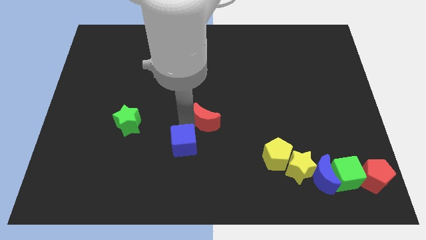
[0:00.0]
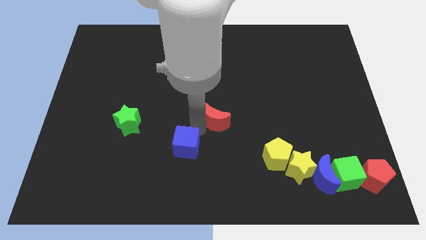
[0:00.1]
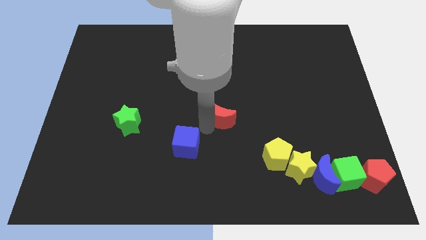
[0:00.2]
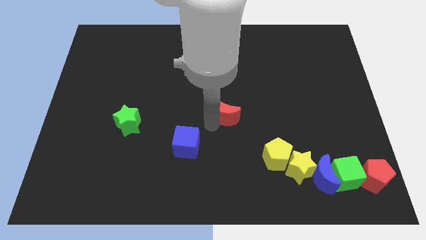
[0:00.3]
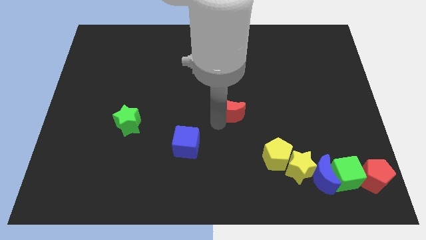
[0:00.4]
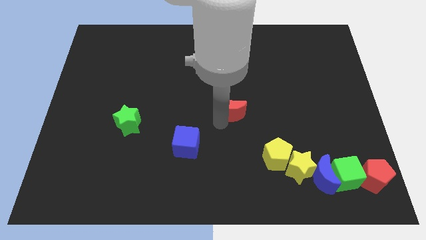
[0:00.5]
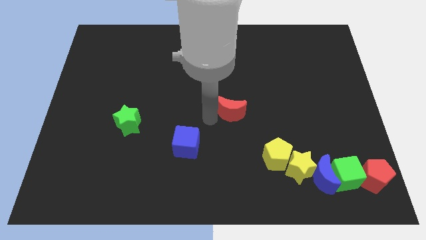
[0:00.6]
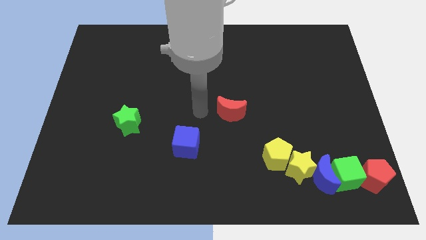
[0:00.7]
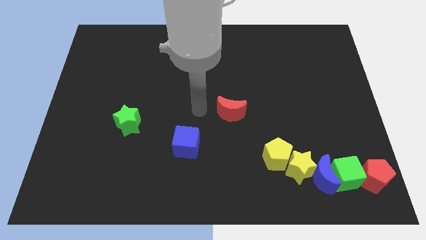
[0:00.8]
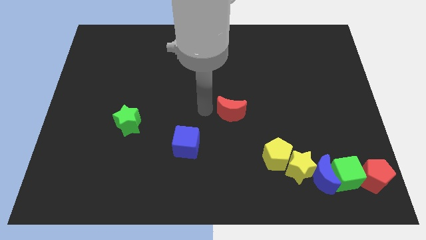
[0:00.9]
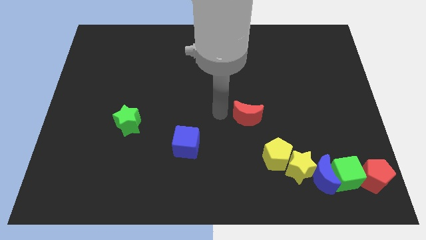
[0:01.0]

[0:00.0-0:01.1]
move the red moon to the center

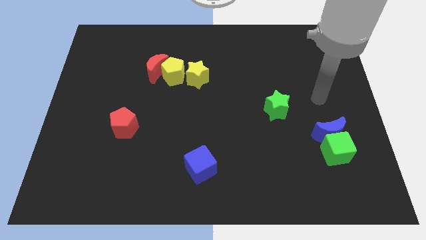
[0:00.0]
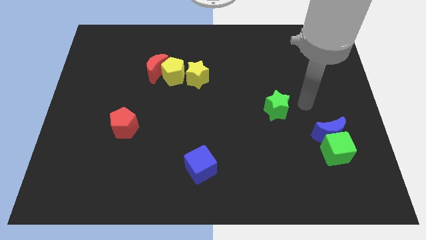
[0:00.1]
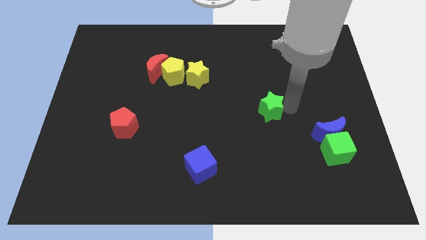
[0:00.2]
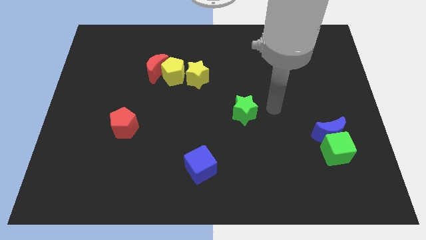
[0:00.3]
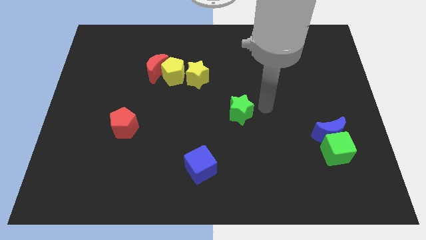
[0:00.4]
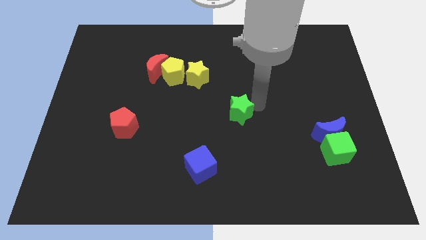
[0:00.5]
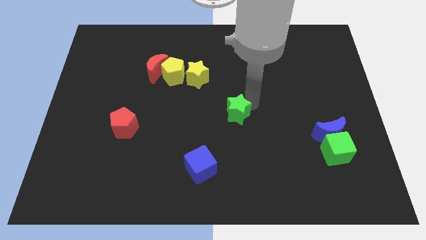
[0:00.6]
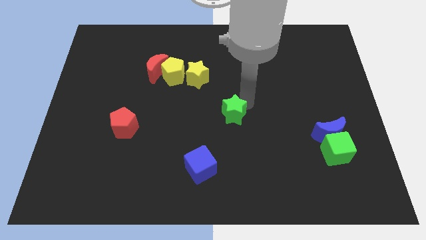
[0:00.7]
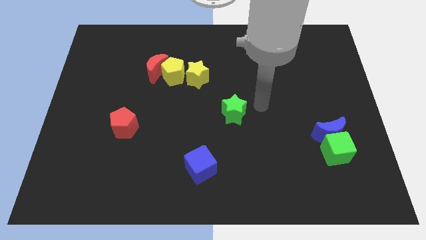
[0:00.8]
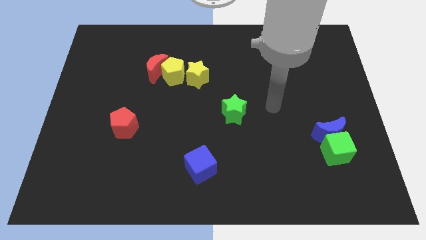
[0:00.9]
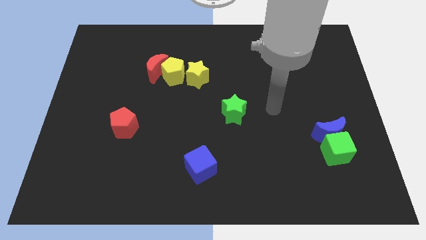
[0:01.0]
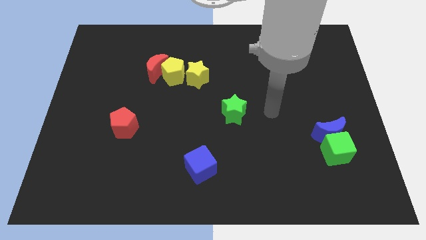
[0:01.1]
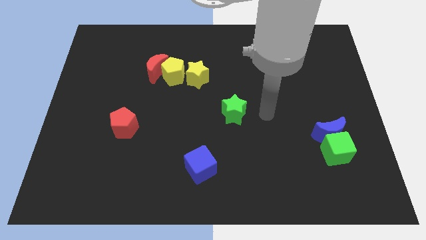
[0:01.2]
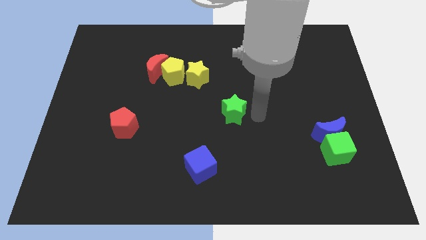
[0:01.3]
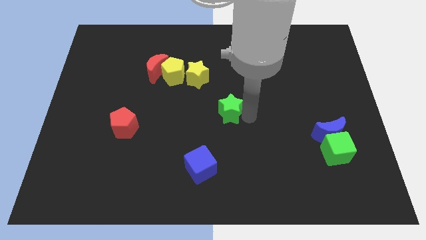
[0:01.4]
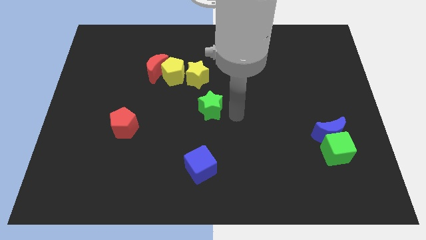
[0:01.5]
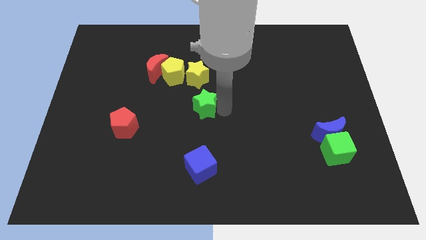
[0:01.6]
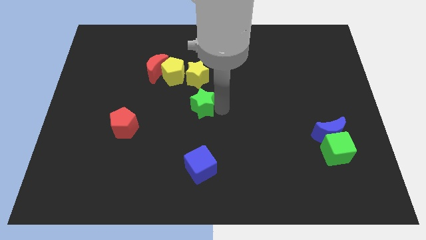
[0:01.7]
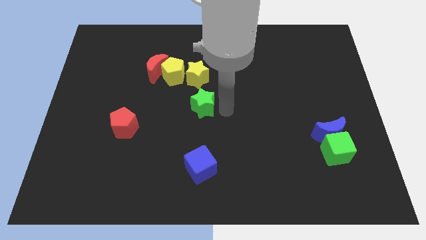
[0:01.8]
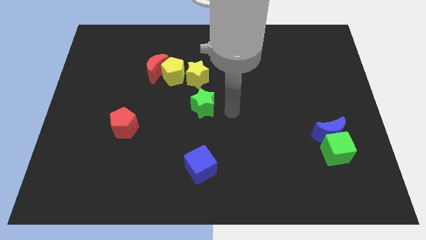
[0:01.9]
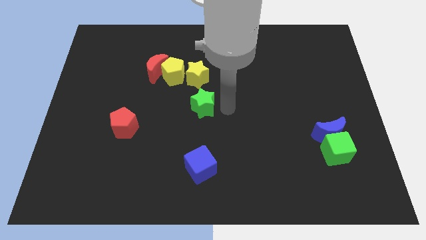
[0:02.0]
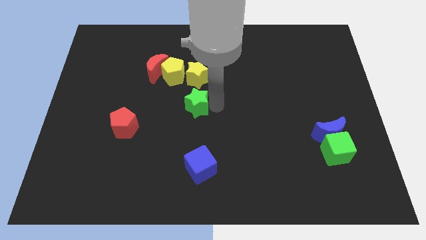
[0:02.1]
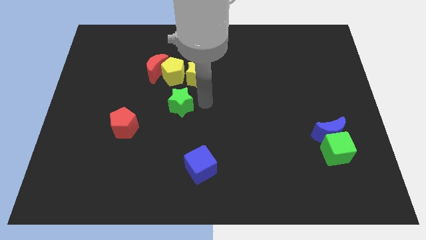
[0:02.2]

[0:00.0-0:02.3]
push the green star bottom of yellow star

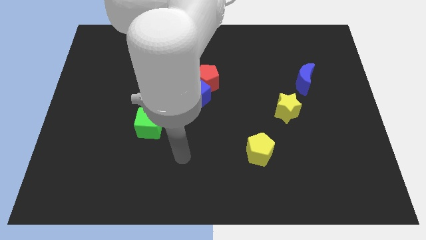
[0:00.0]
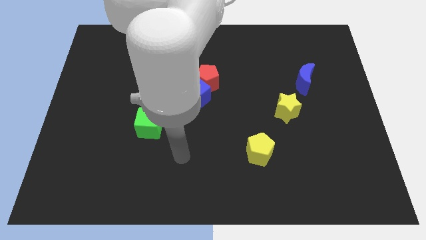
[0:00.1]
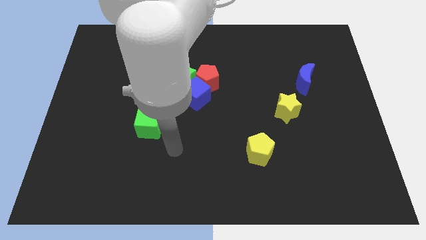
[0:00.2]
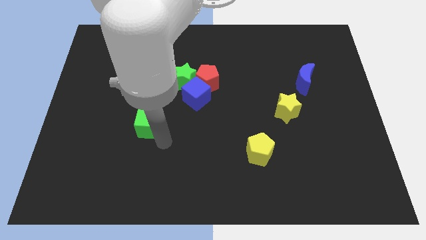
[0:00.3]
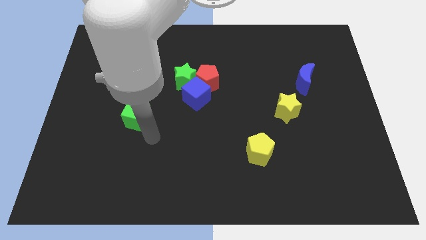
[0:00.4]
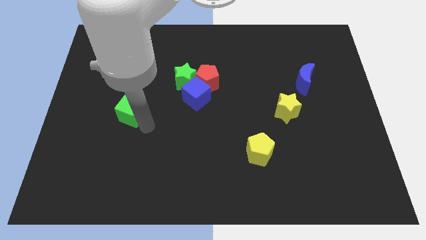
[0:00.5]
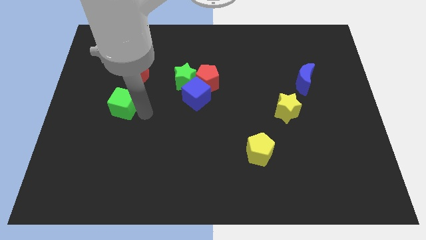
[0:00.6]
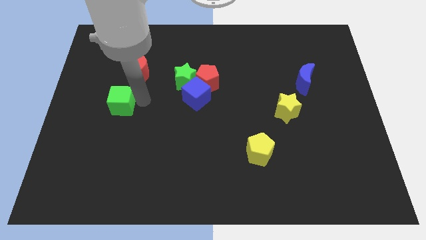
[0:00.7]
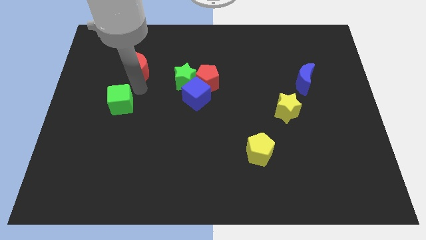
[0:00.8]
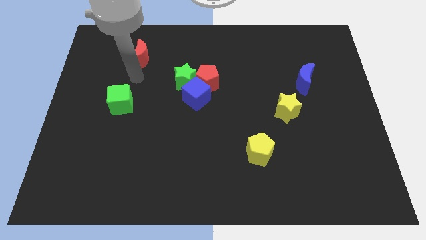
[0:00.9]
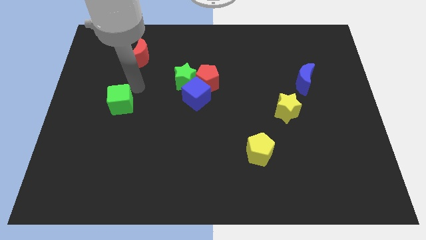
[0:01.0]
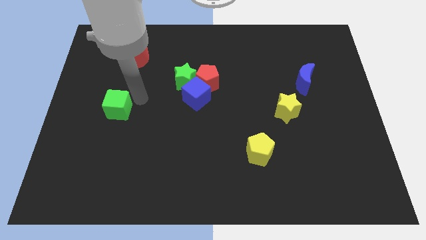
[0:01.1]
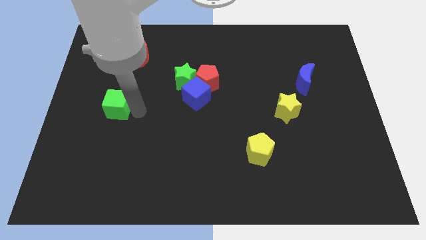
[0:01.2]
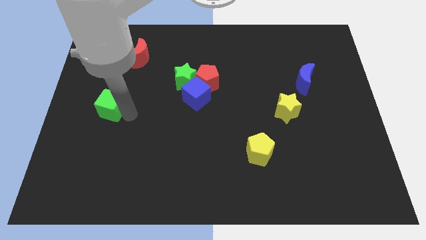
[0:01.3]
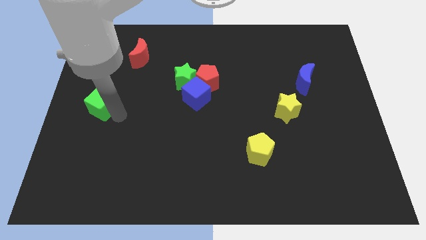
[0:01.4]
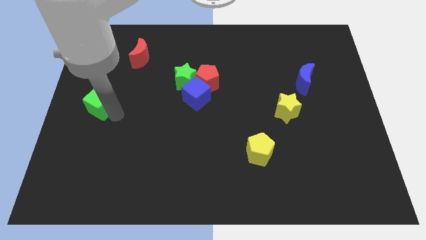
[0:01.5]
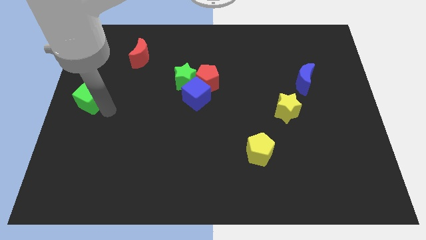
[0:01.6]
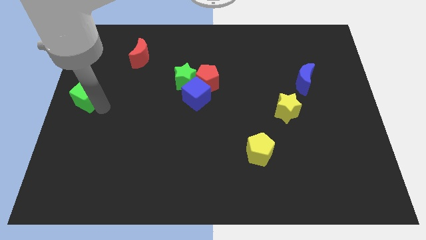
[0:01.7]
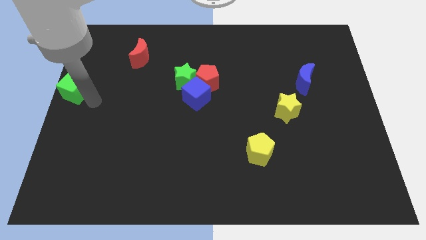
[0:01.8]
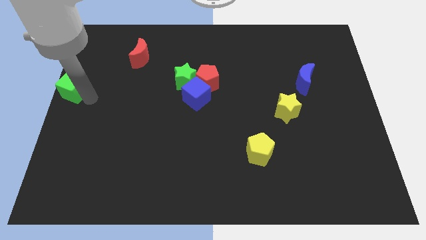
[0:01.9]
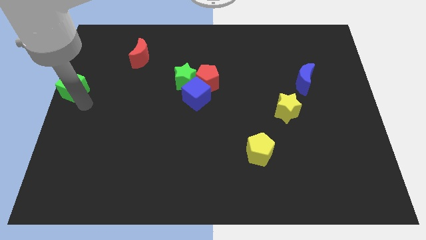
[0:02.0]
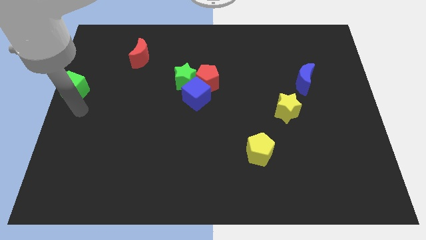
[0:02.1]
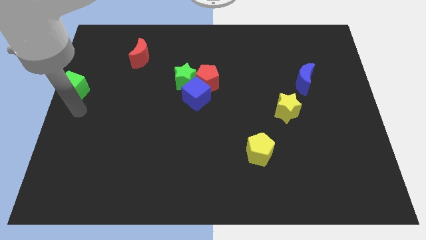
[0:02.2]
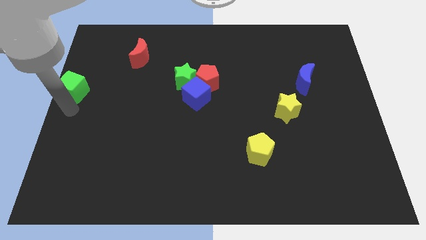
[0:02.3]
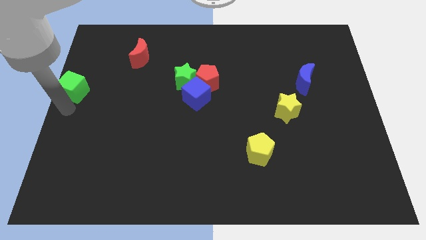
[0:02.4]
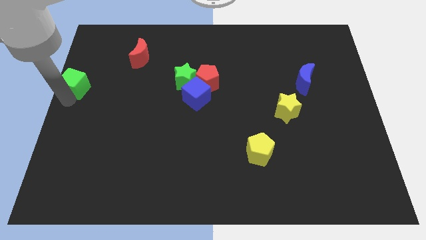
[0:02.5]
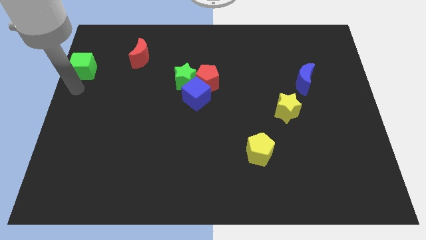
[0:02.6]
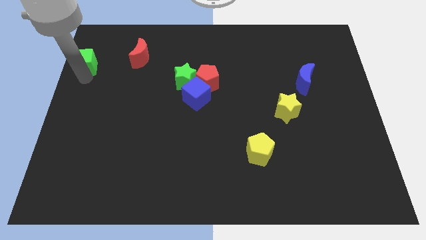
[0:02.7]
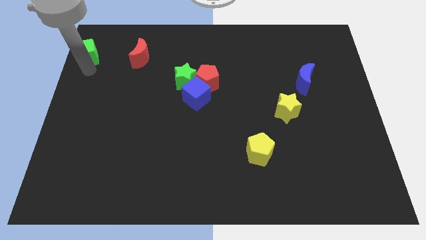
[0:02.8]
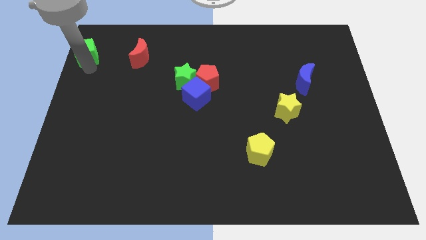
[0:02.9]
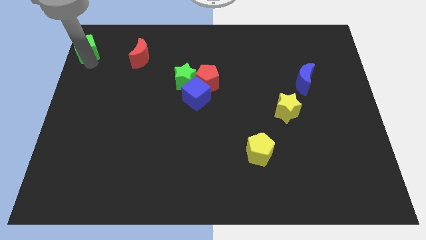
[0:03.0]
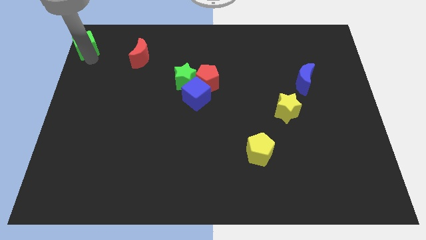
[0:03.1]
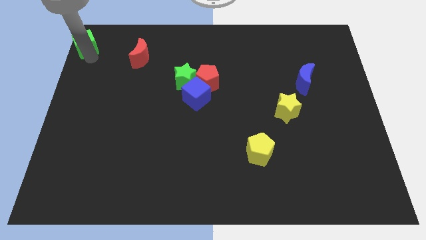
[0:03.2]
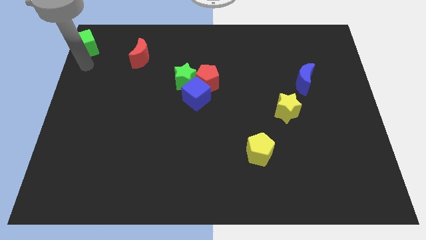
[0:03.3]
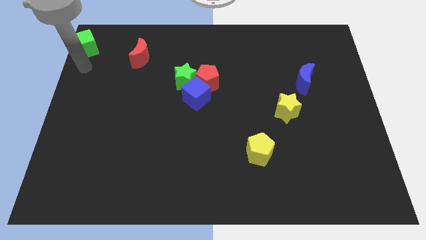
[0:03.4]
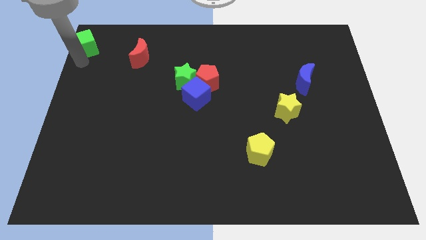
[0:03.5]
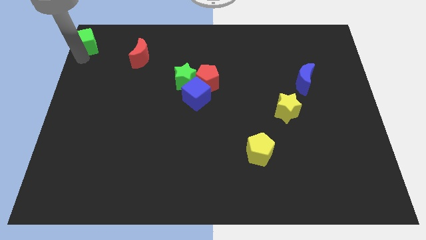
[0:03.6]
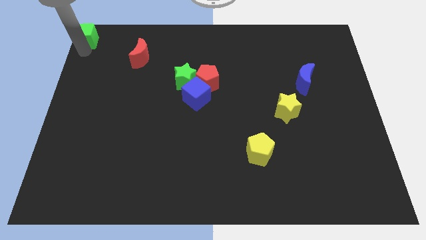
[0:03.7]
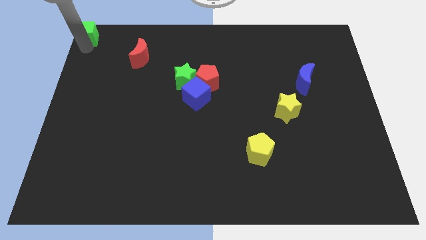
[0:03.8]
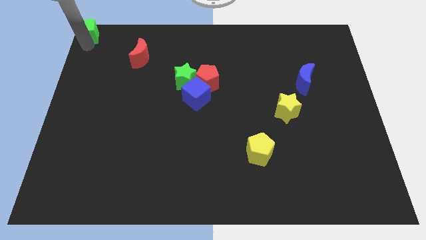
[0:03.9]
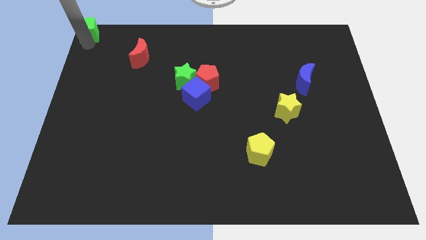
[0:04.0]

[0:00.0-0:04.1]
place the green cube at the top left corner of the board

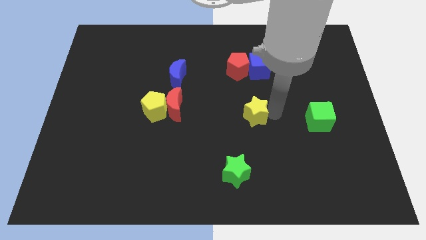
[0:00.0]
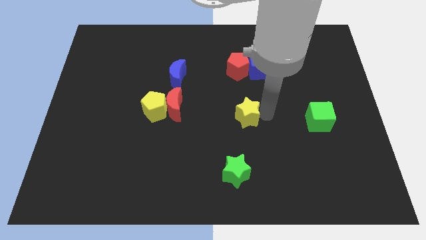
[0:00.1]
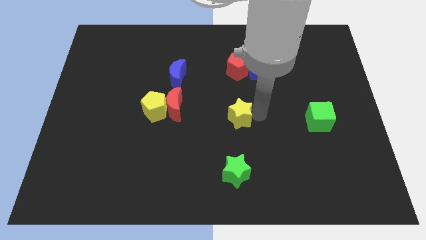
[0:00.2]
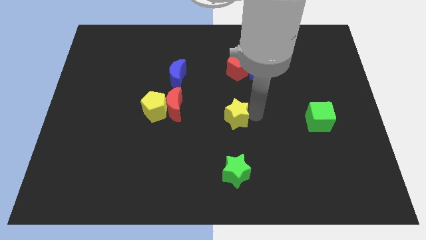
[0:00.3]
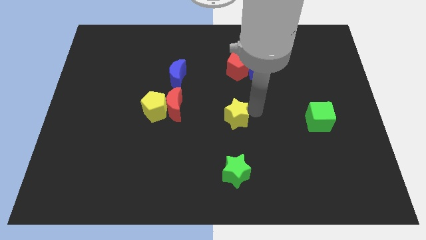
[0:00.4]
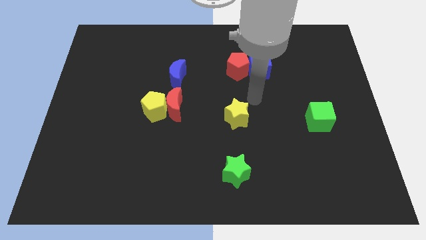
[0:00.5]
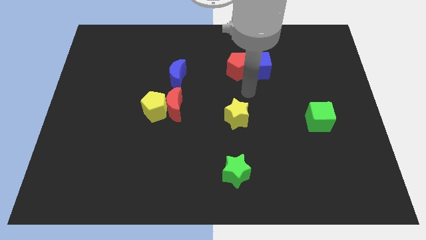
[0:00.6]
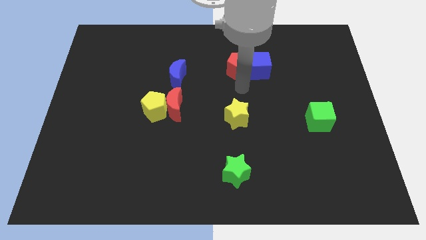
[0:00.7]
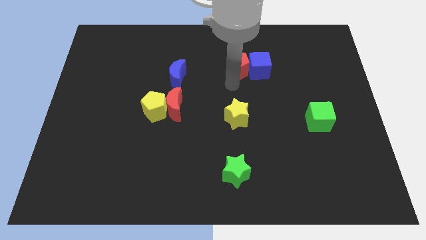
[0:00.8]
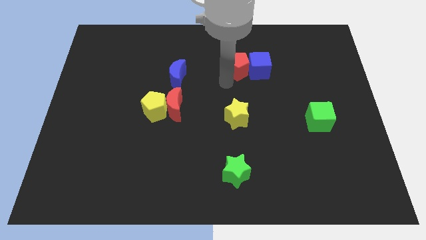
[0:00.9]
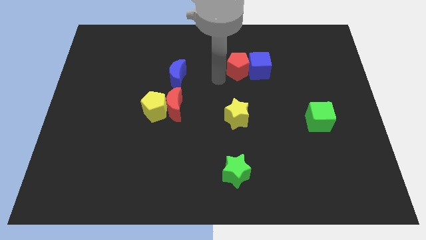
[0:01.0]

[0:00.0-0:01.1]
move yellow star towards red moon

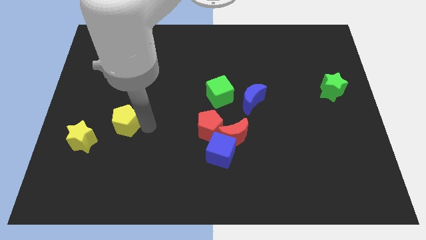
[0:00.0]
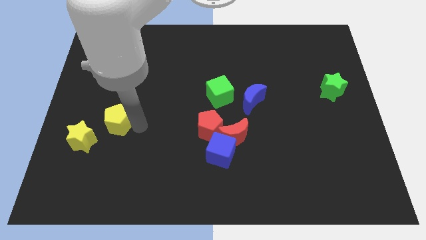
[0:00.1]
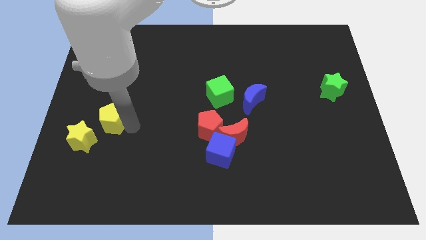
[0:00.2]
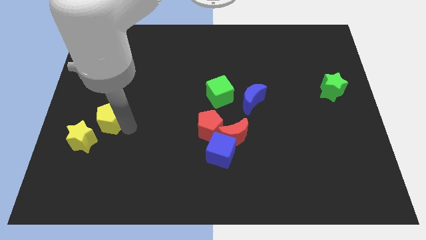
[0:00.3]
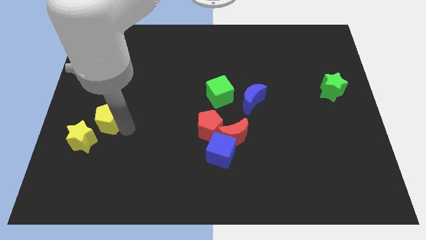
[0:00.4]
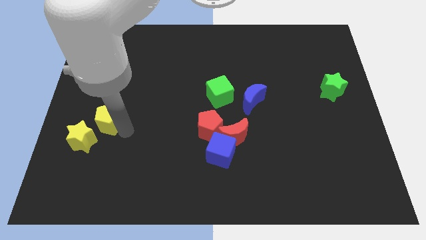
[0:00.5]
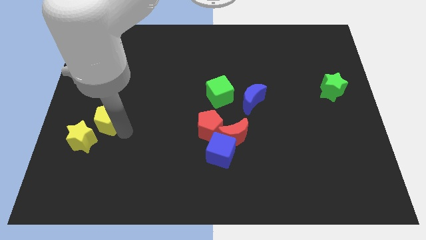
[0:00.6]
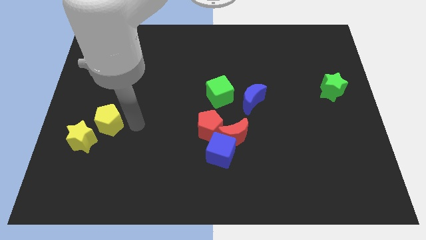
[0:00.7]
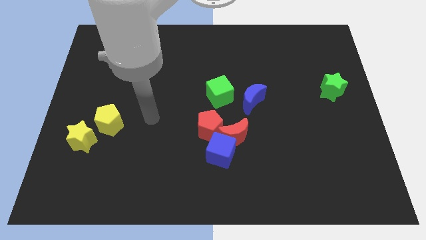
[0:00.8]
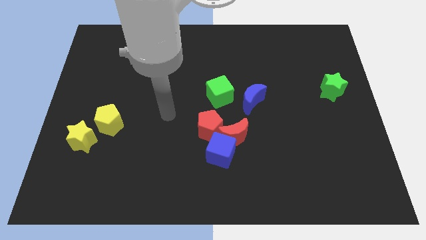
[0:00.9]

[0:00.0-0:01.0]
place the yellow pentagon to the top right of the yellow star
